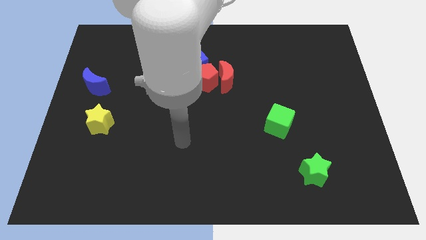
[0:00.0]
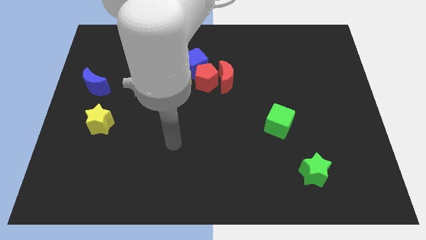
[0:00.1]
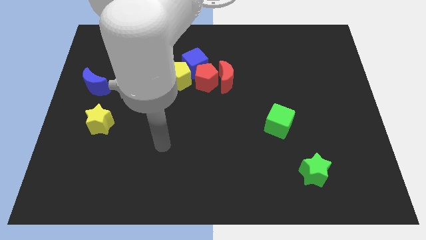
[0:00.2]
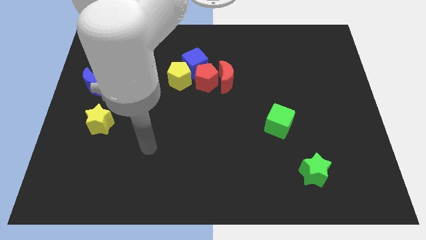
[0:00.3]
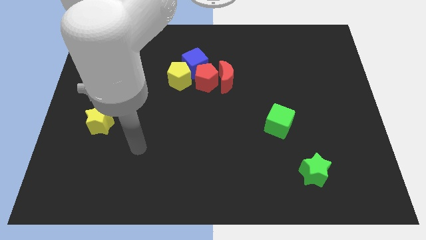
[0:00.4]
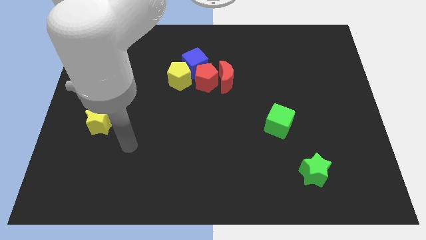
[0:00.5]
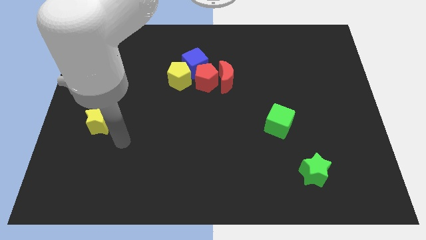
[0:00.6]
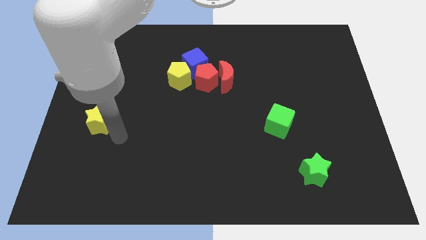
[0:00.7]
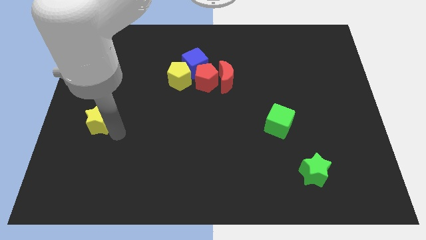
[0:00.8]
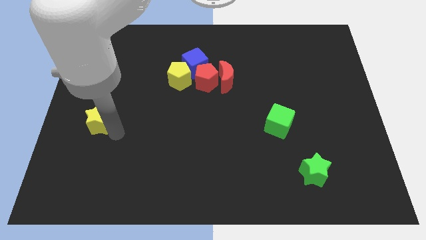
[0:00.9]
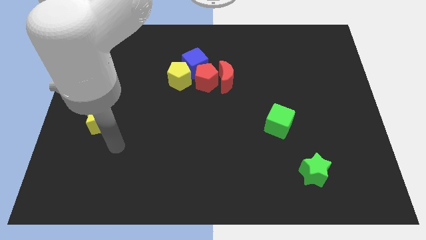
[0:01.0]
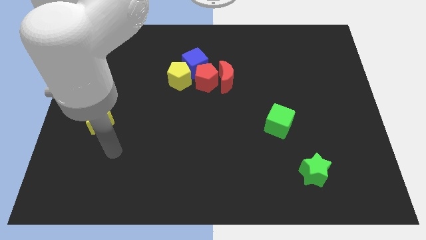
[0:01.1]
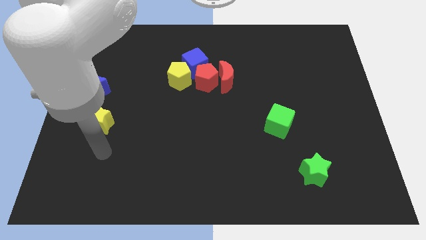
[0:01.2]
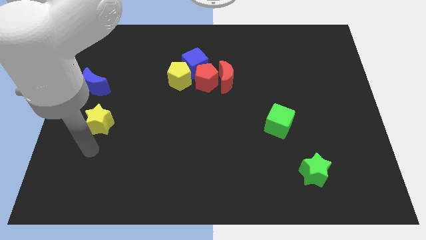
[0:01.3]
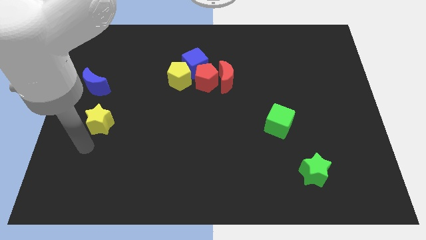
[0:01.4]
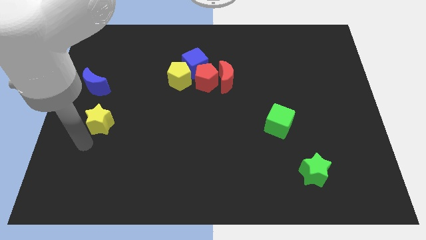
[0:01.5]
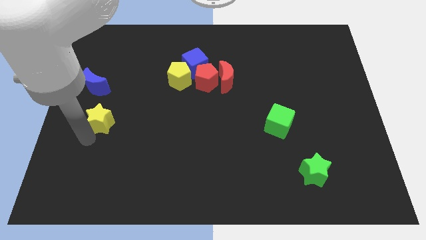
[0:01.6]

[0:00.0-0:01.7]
place your arm at the bottom of yellow star

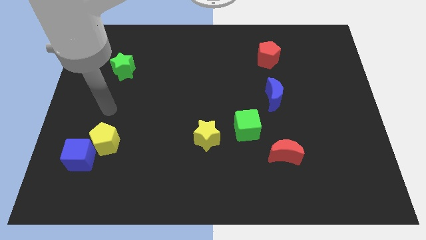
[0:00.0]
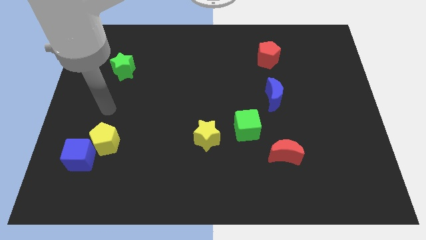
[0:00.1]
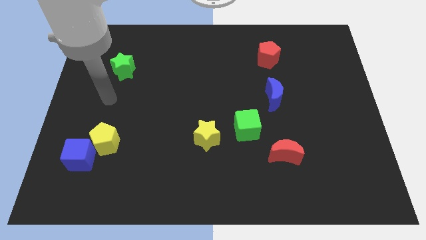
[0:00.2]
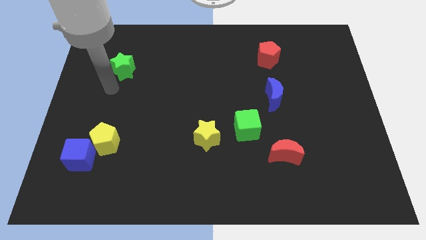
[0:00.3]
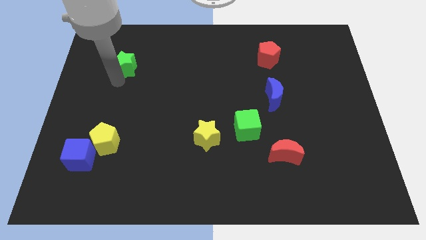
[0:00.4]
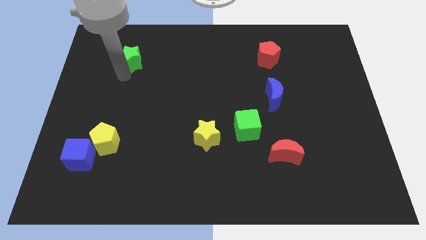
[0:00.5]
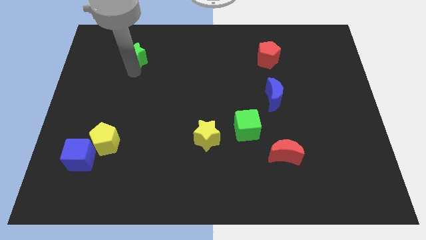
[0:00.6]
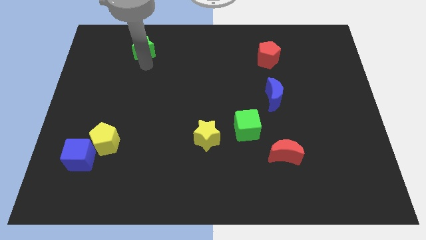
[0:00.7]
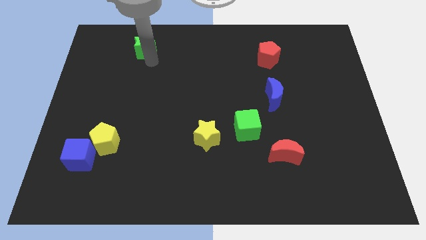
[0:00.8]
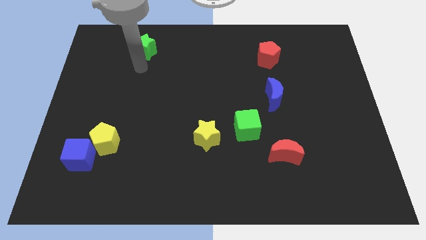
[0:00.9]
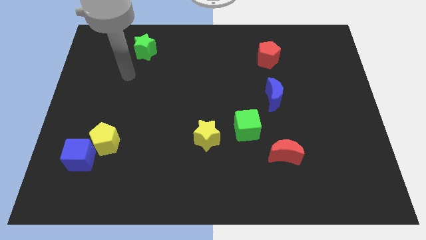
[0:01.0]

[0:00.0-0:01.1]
push the green star to the top

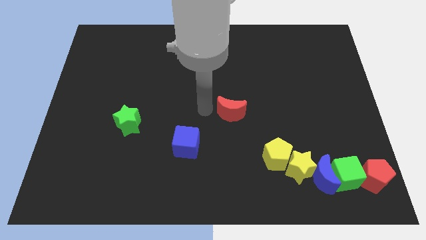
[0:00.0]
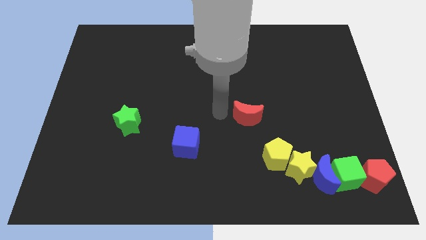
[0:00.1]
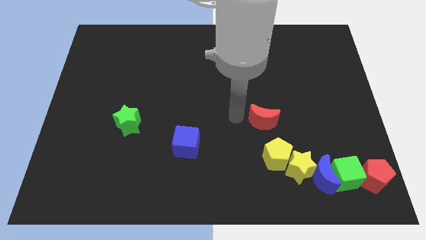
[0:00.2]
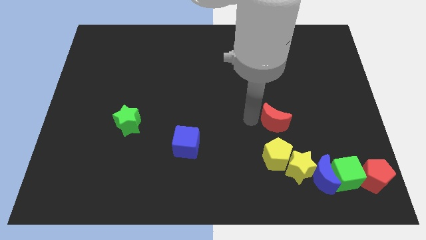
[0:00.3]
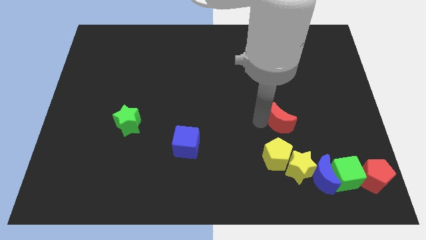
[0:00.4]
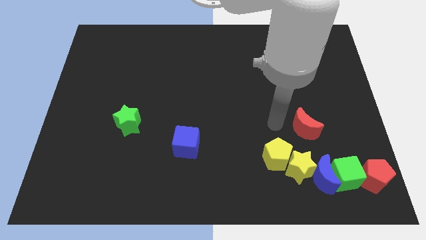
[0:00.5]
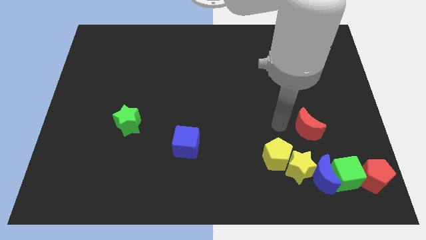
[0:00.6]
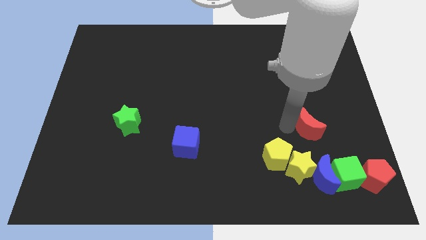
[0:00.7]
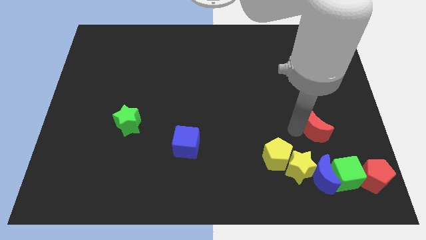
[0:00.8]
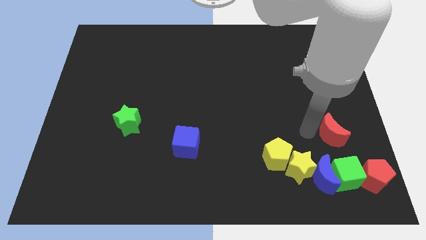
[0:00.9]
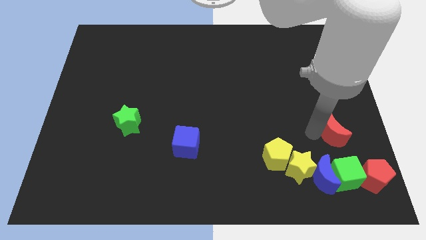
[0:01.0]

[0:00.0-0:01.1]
place the red moon above the green cube

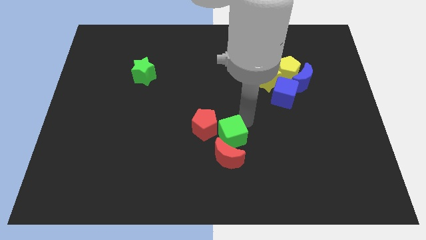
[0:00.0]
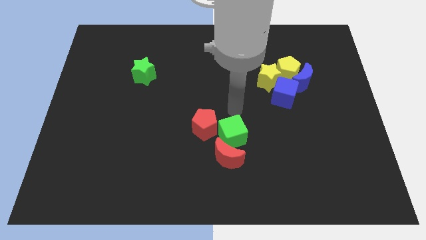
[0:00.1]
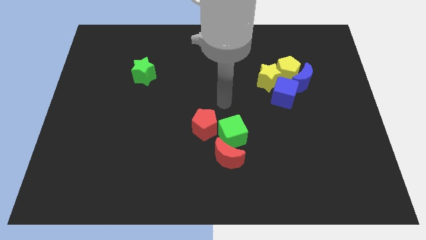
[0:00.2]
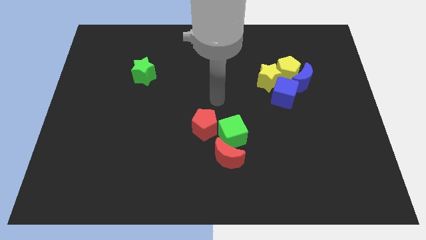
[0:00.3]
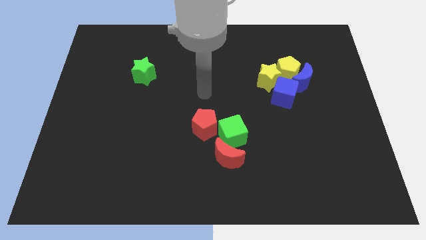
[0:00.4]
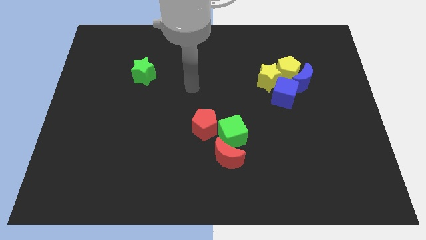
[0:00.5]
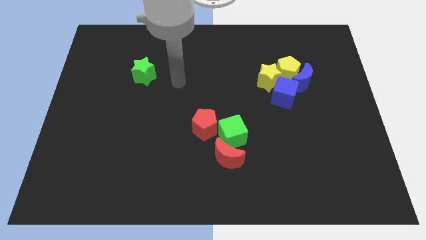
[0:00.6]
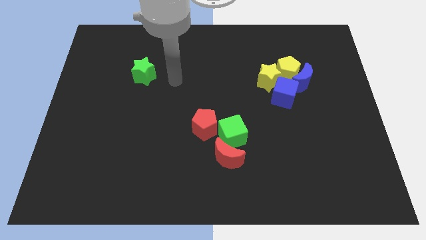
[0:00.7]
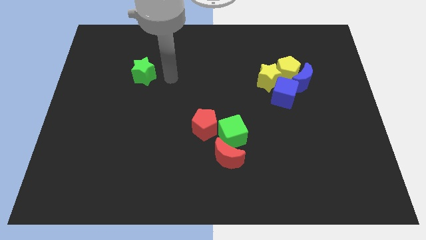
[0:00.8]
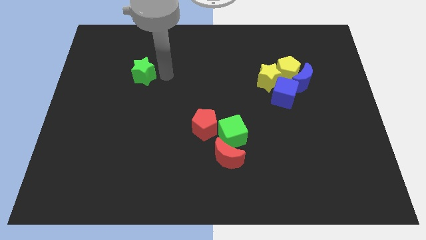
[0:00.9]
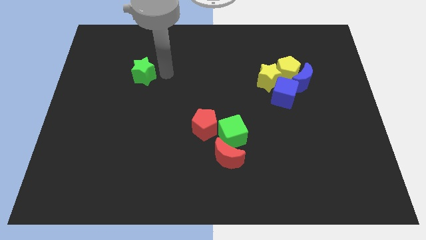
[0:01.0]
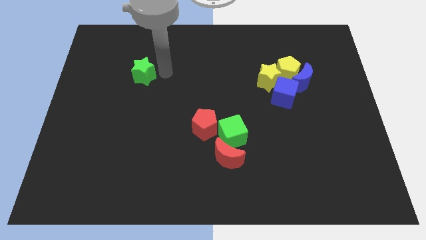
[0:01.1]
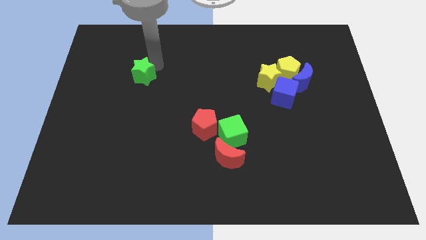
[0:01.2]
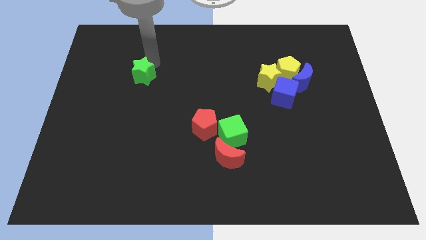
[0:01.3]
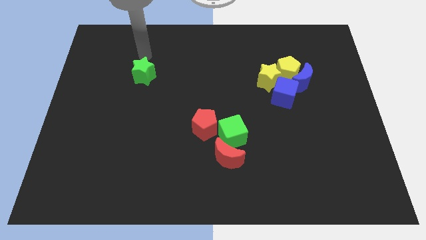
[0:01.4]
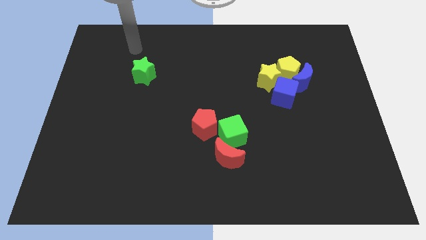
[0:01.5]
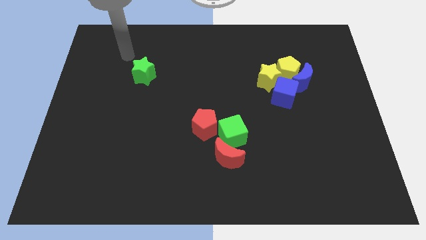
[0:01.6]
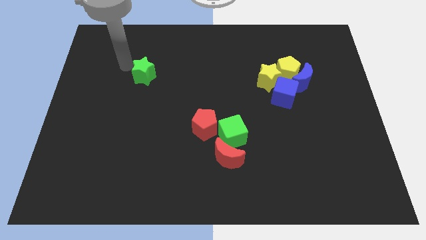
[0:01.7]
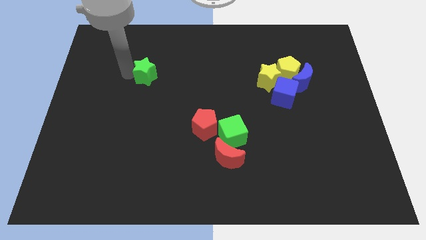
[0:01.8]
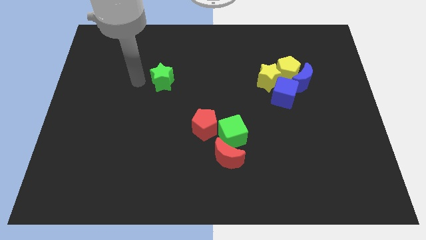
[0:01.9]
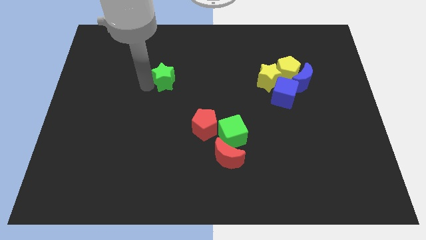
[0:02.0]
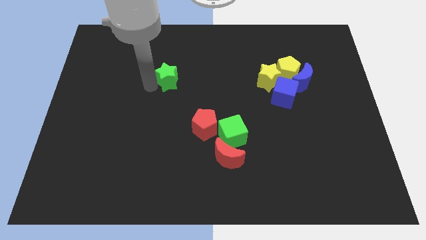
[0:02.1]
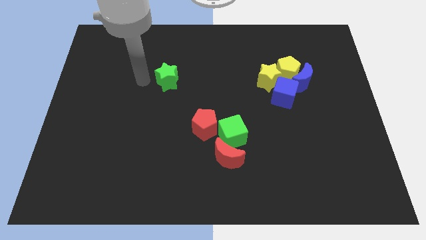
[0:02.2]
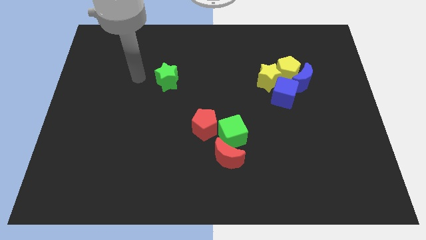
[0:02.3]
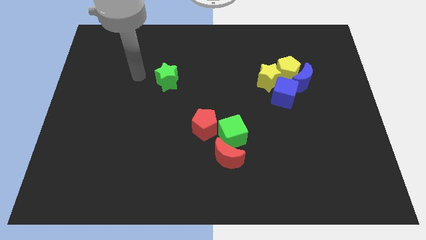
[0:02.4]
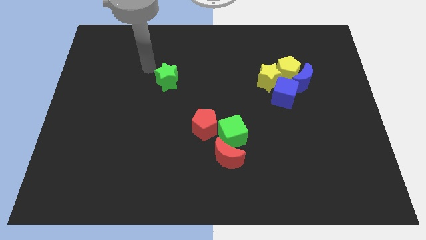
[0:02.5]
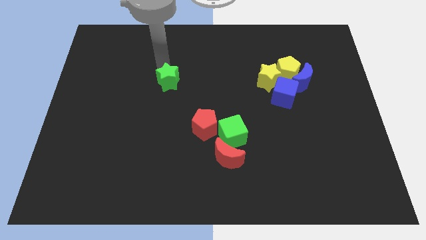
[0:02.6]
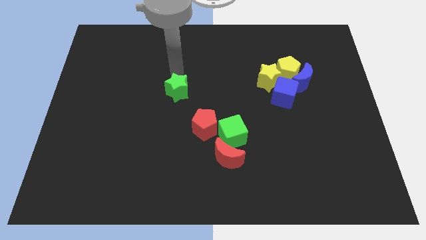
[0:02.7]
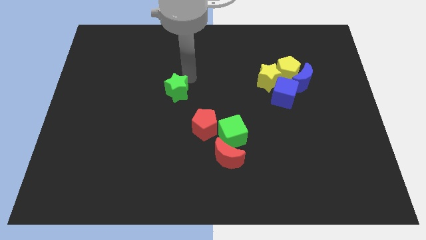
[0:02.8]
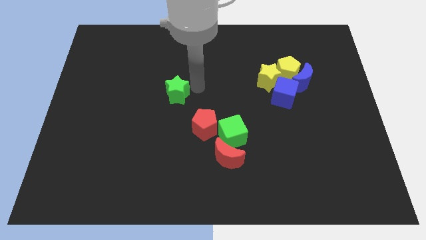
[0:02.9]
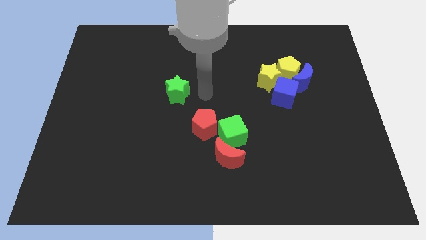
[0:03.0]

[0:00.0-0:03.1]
move the green star to the top left of the red crescent

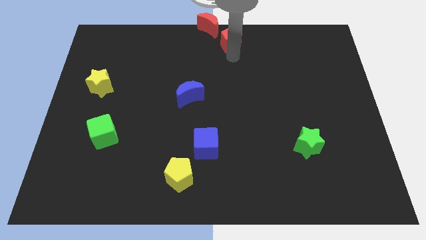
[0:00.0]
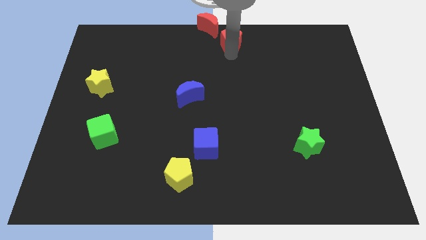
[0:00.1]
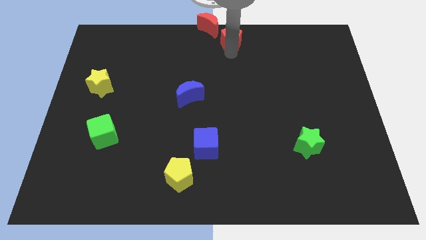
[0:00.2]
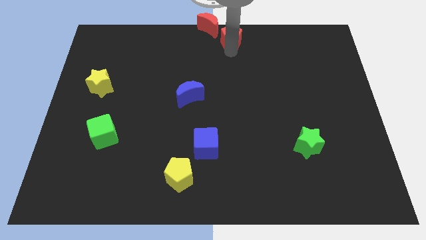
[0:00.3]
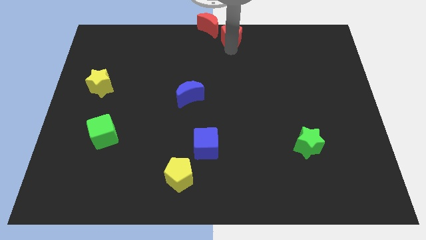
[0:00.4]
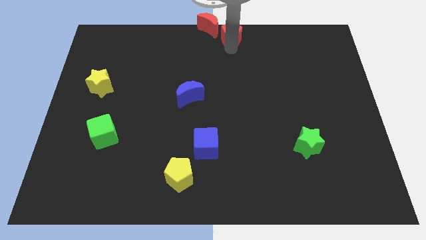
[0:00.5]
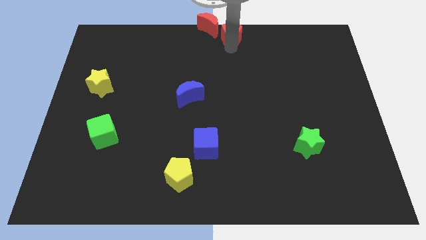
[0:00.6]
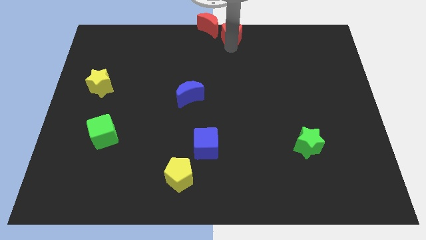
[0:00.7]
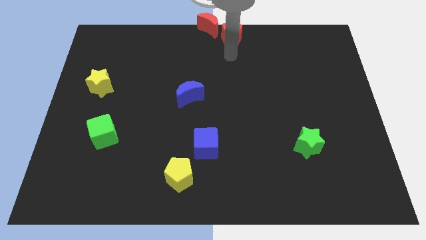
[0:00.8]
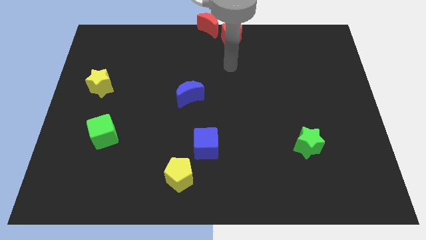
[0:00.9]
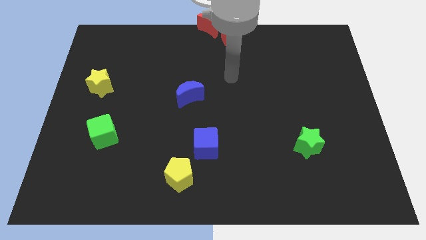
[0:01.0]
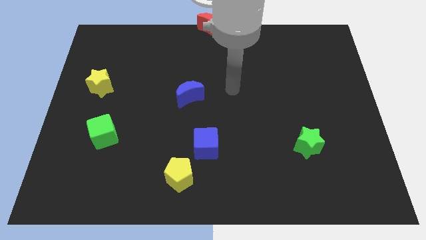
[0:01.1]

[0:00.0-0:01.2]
place the red pentagon right to the red crescent

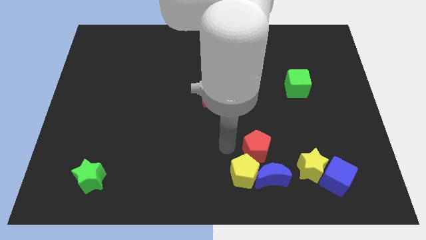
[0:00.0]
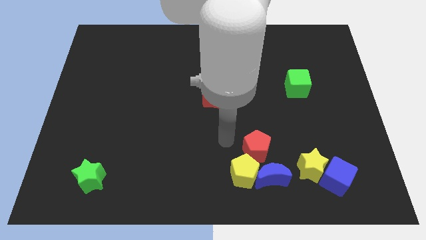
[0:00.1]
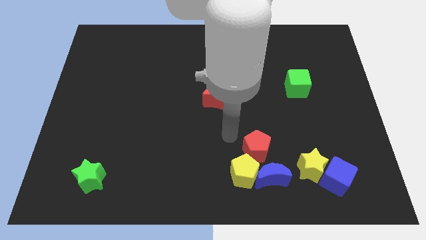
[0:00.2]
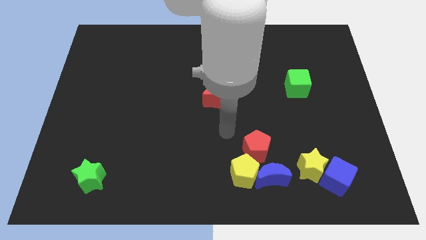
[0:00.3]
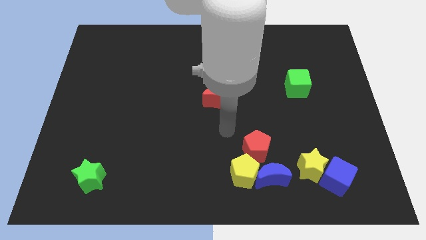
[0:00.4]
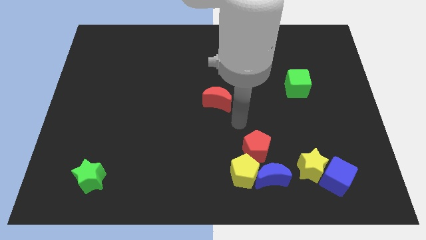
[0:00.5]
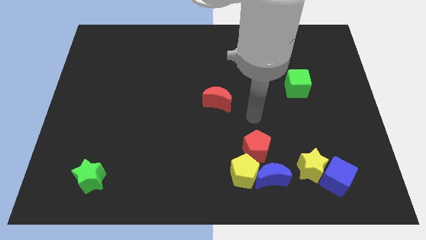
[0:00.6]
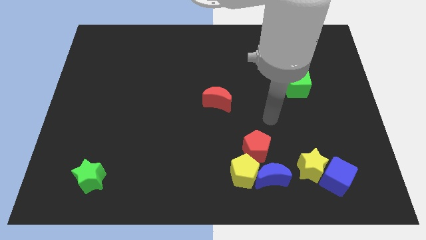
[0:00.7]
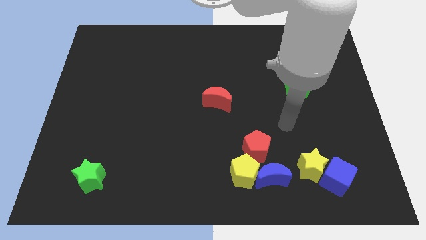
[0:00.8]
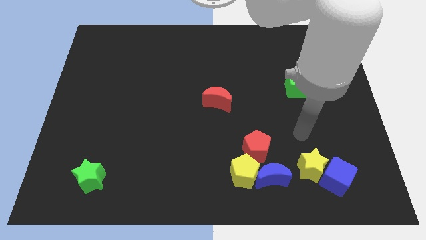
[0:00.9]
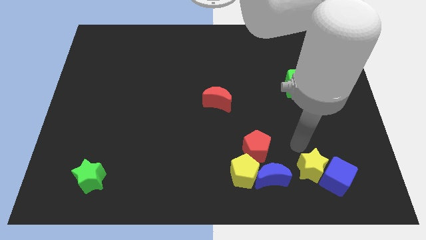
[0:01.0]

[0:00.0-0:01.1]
move your hand close to the top left of the yellow star
